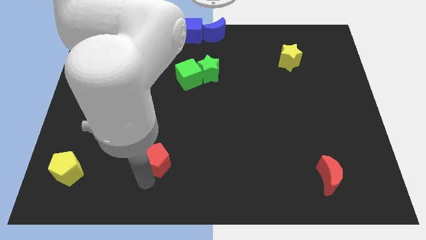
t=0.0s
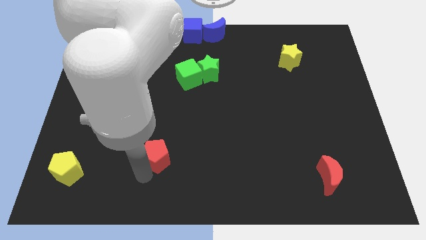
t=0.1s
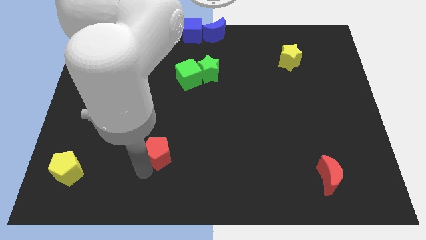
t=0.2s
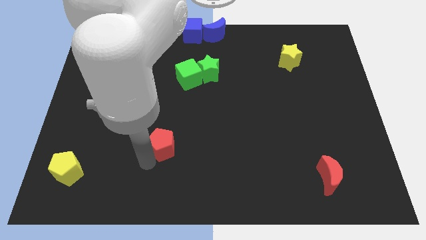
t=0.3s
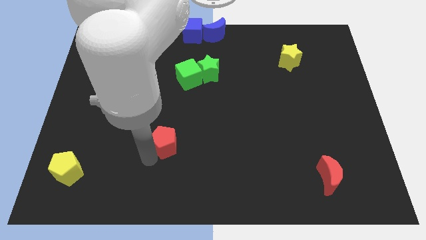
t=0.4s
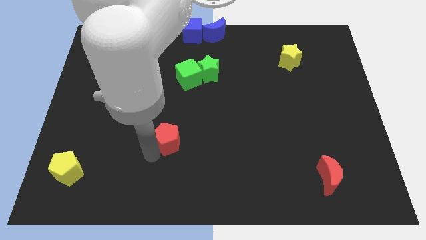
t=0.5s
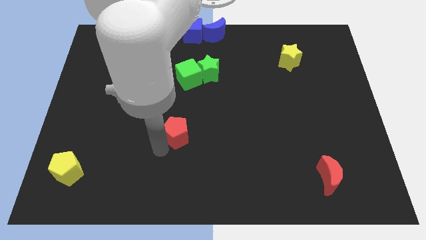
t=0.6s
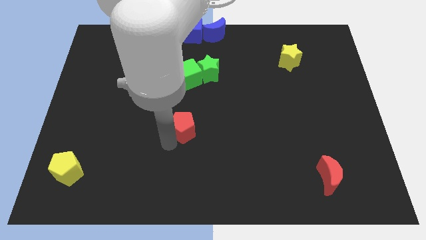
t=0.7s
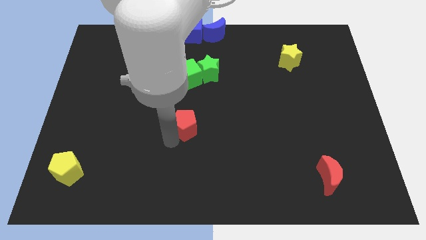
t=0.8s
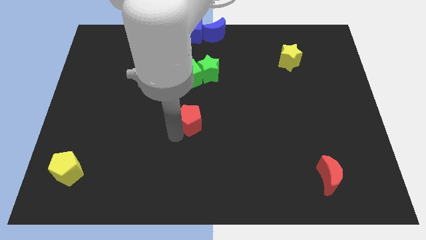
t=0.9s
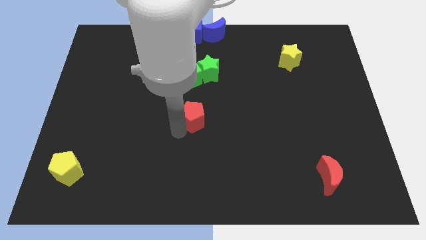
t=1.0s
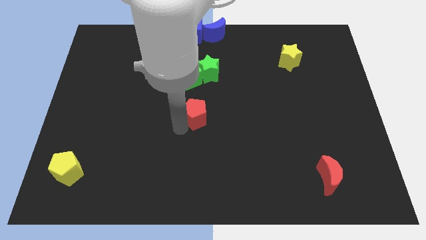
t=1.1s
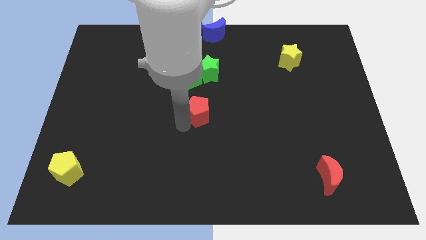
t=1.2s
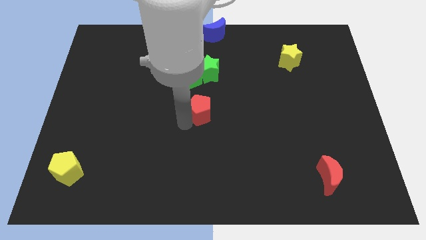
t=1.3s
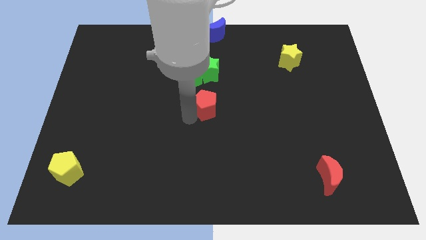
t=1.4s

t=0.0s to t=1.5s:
push red pentagon closer to the green cube

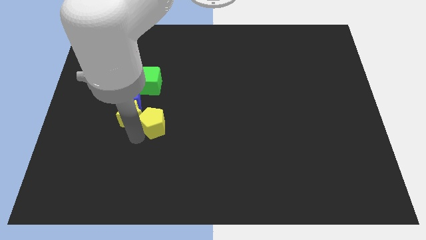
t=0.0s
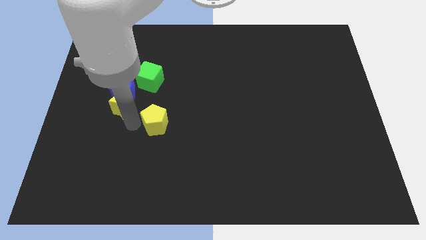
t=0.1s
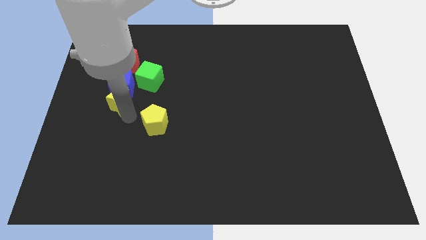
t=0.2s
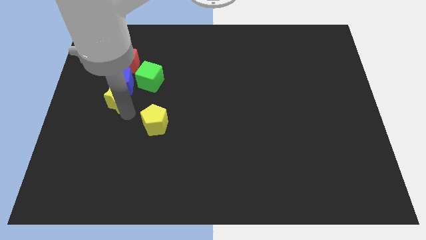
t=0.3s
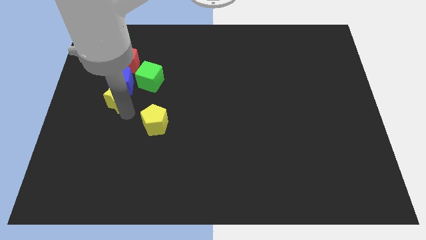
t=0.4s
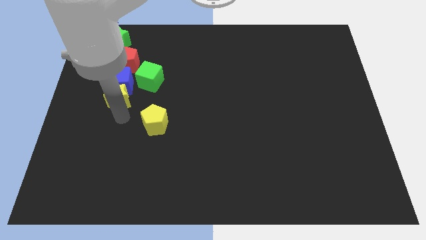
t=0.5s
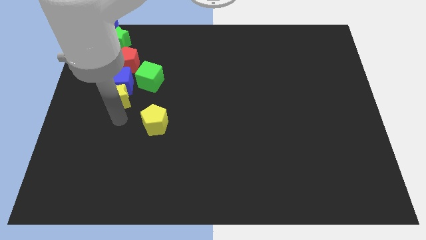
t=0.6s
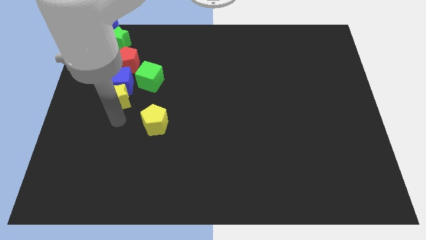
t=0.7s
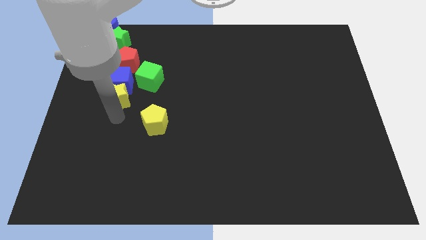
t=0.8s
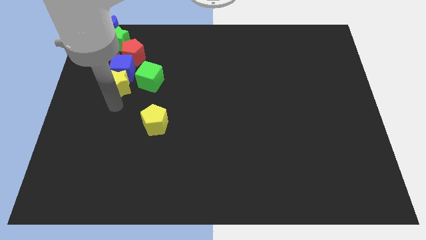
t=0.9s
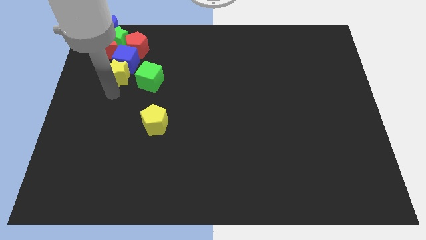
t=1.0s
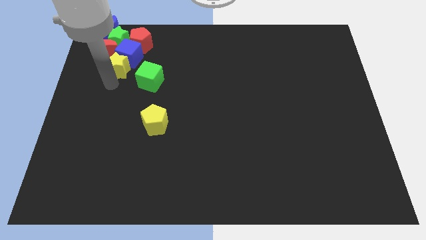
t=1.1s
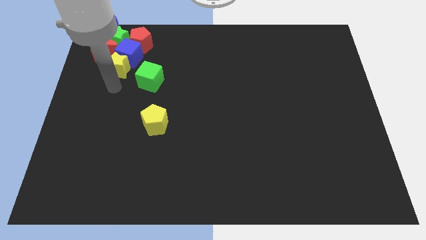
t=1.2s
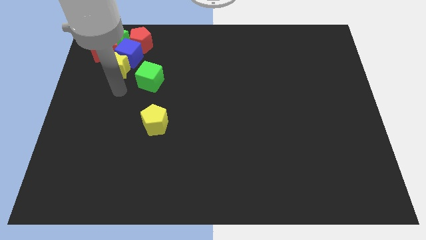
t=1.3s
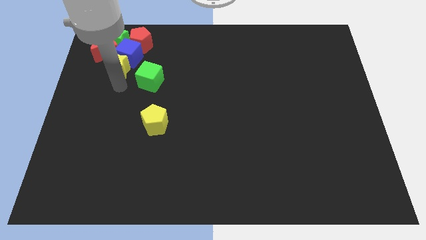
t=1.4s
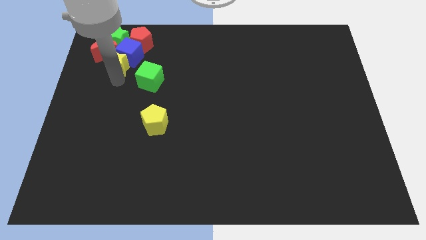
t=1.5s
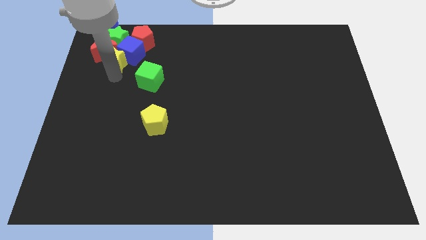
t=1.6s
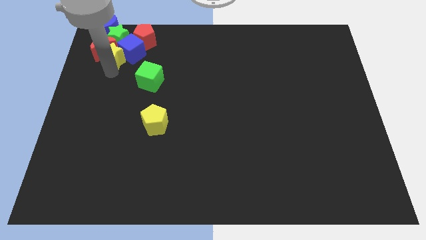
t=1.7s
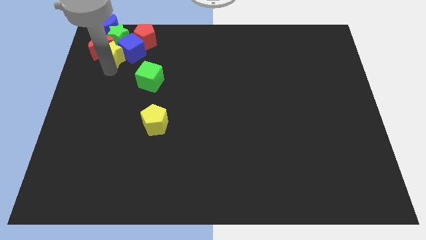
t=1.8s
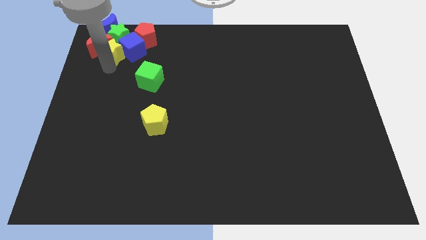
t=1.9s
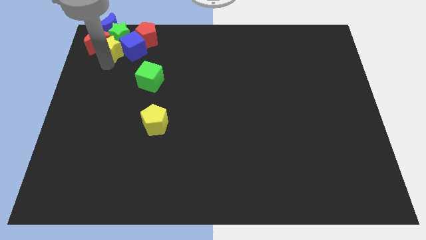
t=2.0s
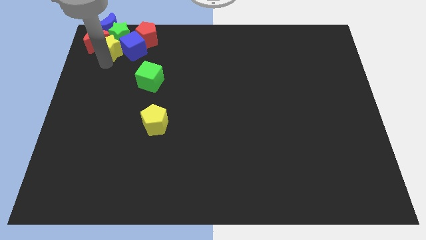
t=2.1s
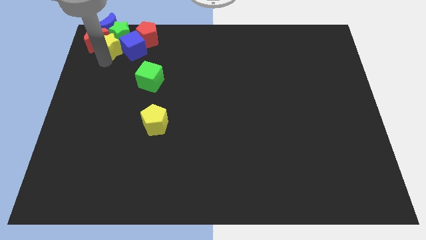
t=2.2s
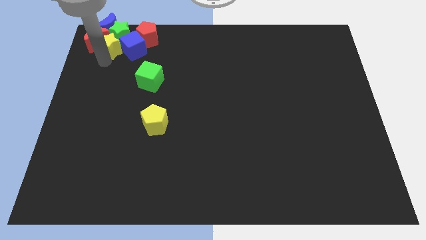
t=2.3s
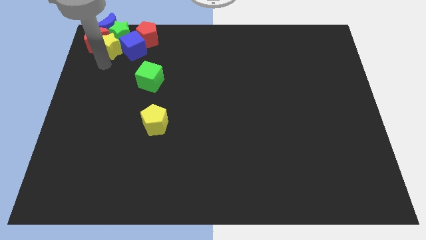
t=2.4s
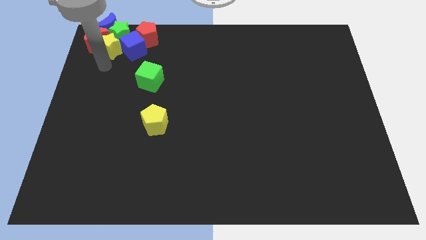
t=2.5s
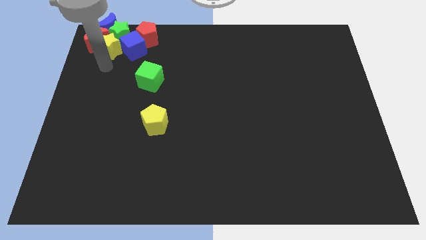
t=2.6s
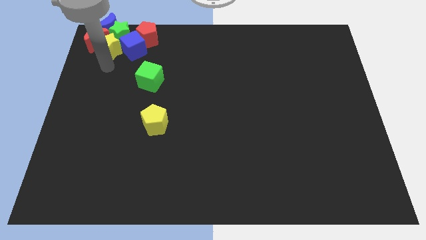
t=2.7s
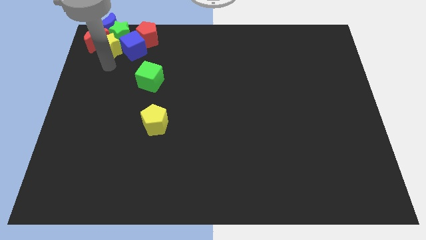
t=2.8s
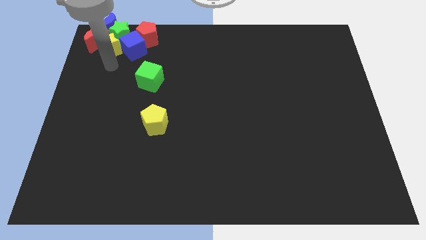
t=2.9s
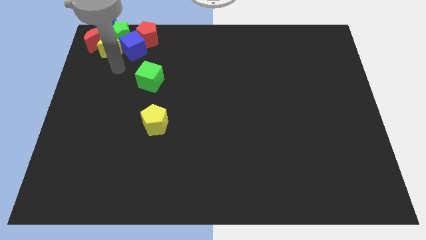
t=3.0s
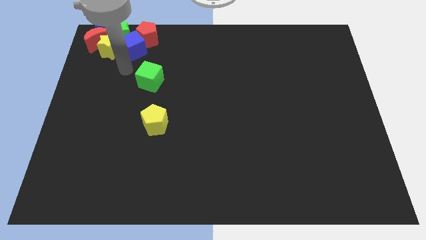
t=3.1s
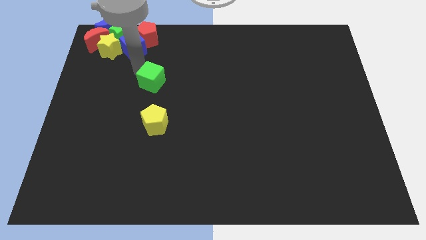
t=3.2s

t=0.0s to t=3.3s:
move the group of blocks except green cube and yellow pentagon to the top left corner of the board

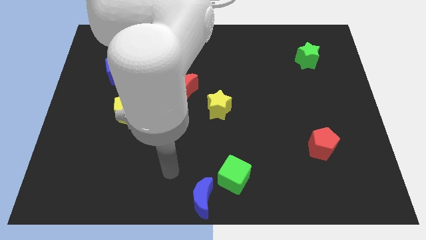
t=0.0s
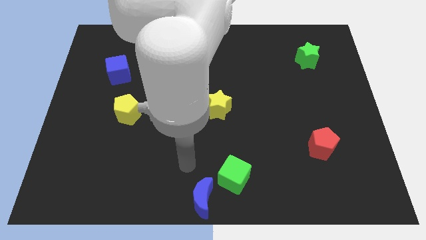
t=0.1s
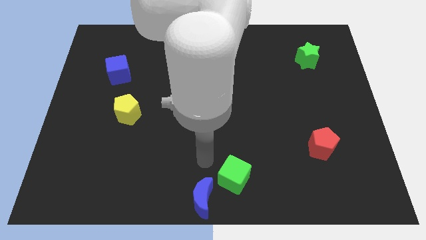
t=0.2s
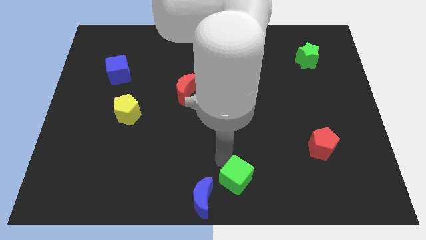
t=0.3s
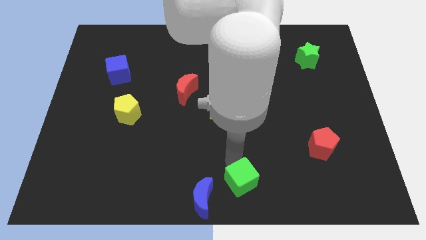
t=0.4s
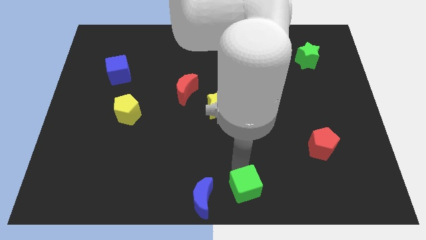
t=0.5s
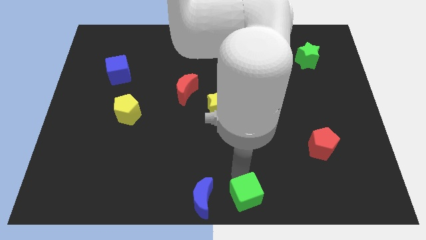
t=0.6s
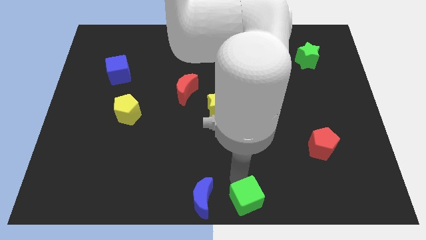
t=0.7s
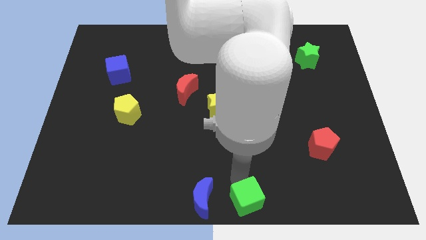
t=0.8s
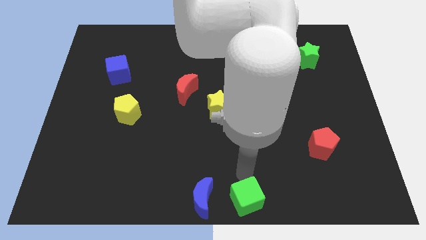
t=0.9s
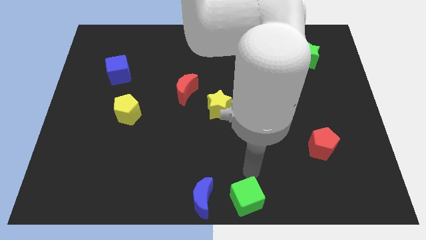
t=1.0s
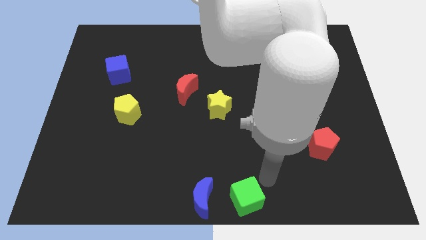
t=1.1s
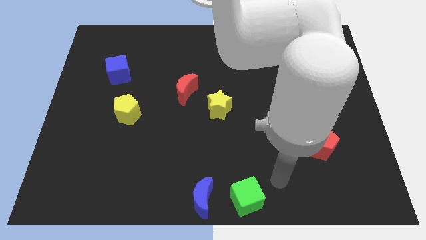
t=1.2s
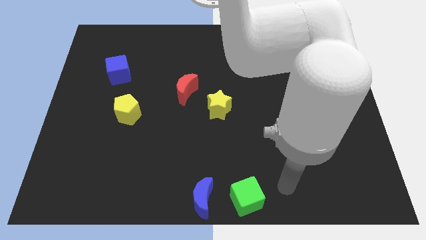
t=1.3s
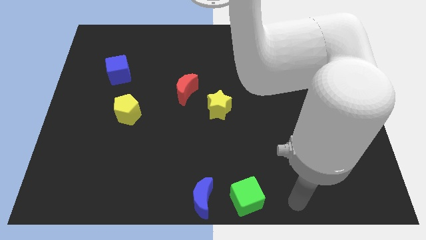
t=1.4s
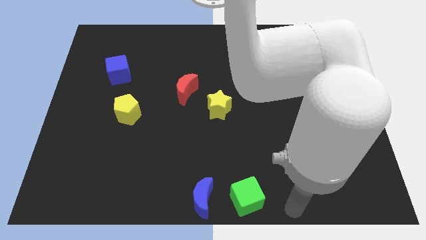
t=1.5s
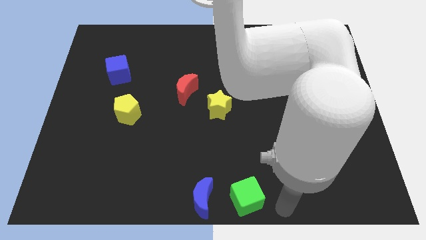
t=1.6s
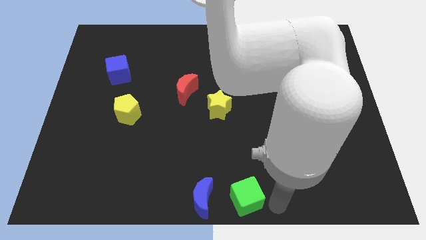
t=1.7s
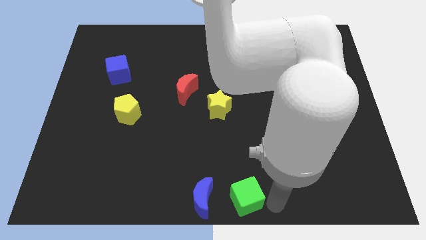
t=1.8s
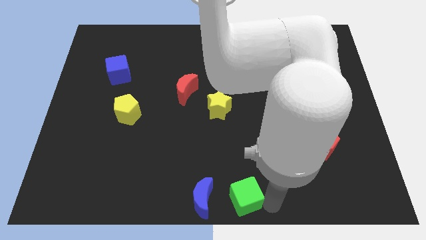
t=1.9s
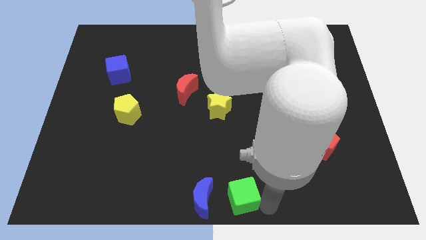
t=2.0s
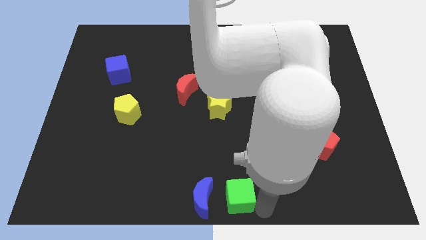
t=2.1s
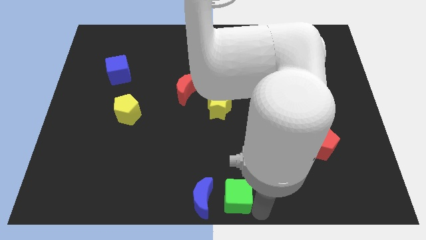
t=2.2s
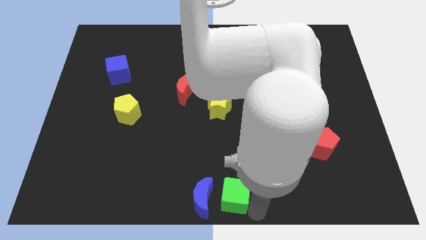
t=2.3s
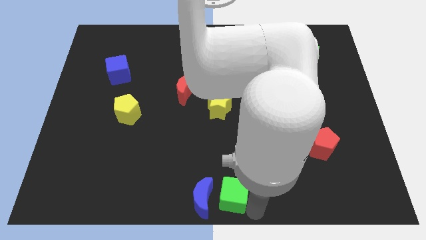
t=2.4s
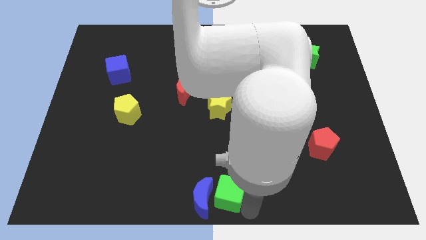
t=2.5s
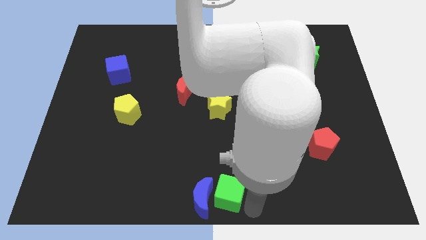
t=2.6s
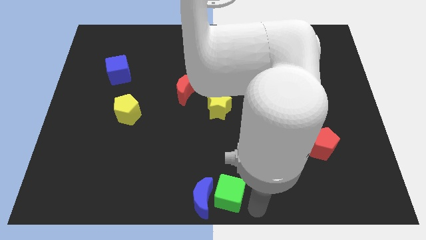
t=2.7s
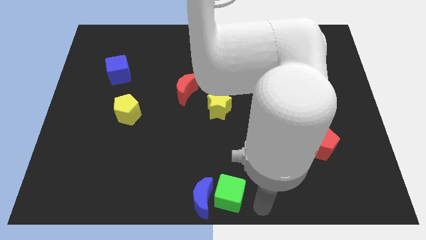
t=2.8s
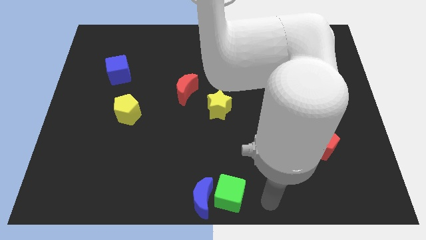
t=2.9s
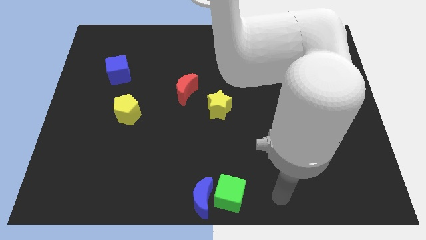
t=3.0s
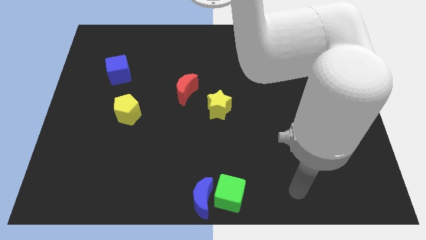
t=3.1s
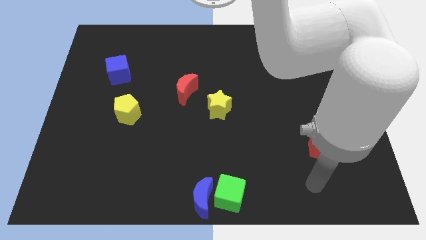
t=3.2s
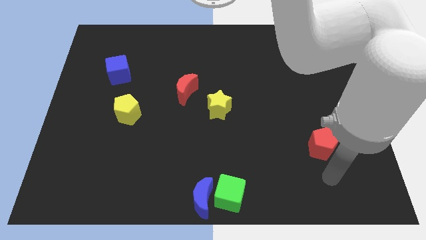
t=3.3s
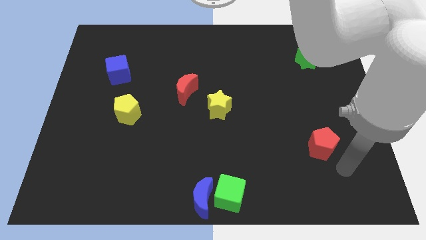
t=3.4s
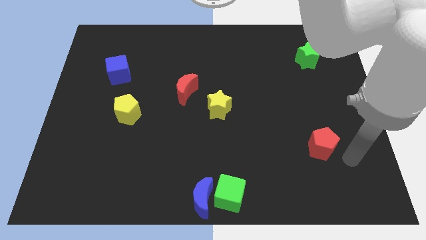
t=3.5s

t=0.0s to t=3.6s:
place the green cube to the right of the blue crescent

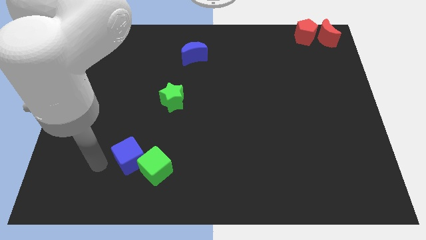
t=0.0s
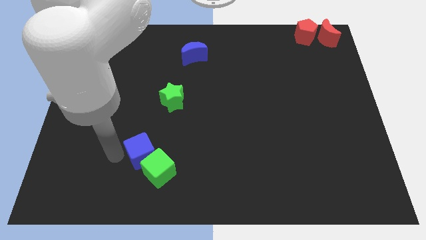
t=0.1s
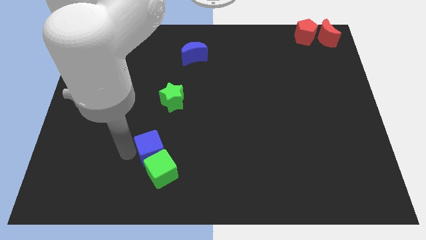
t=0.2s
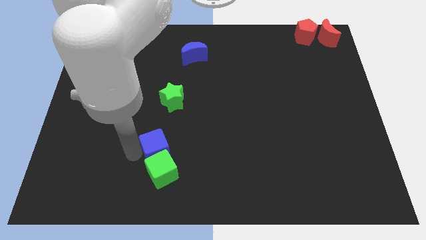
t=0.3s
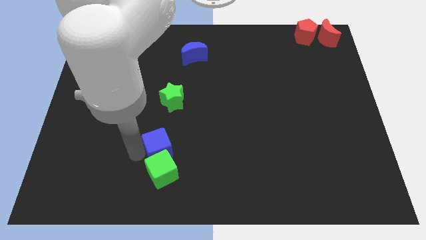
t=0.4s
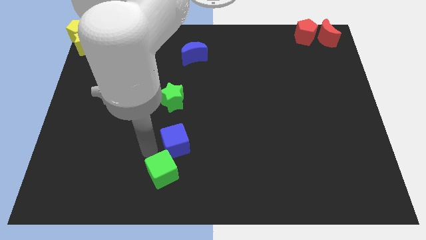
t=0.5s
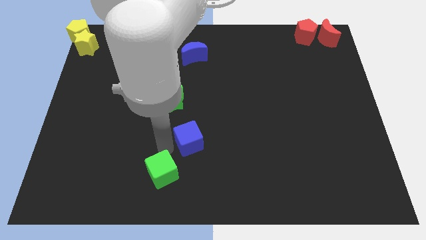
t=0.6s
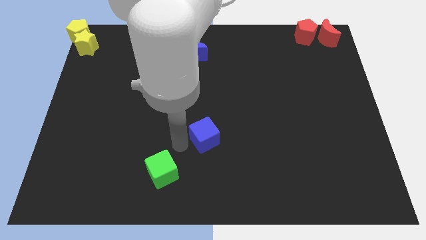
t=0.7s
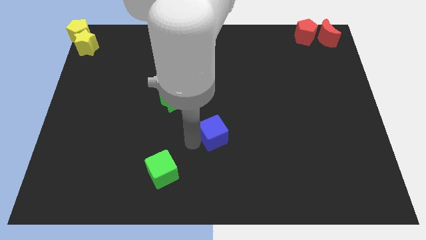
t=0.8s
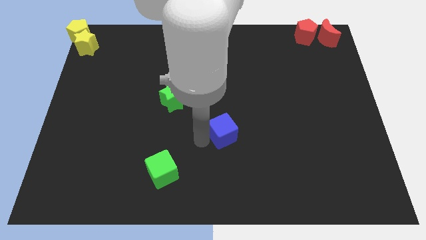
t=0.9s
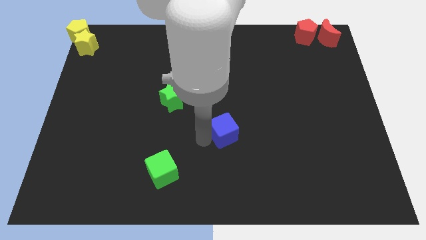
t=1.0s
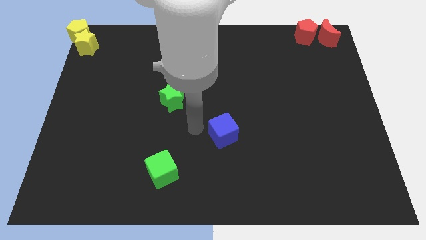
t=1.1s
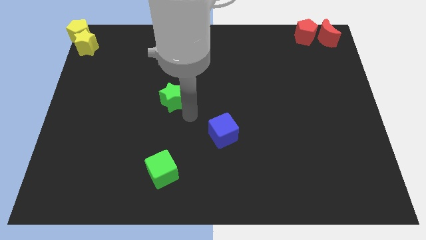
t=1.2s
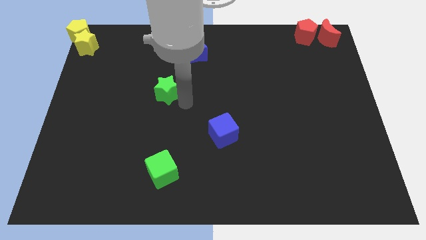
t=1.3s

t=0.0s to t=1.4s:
push the blue cube parallel to the green star
